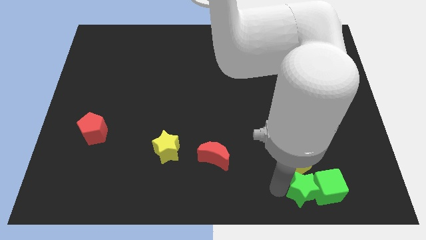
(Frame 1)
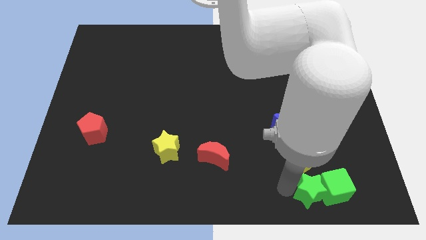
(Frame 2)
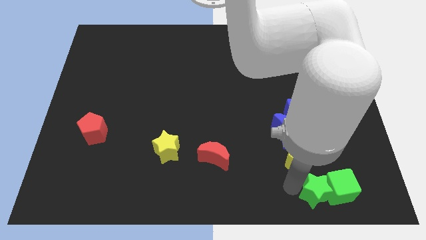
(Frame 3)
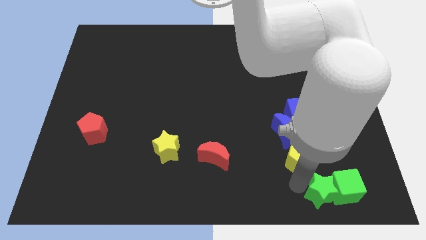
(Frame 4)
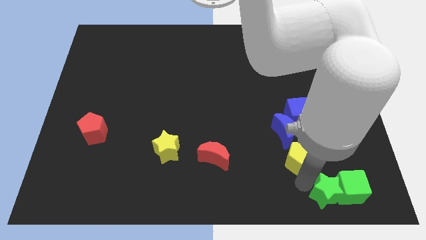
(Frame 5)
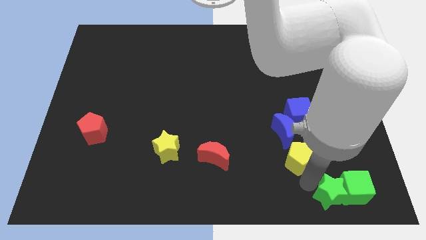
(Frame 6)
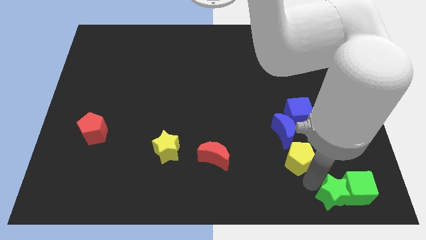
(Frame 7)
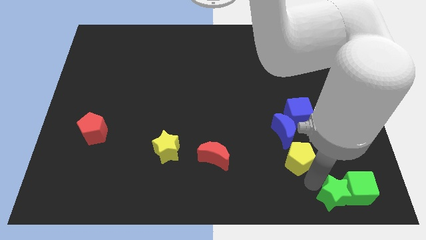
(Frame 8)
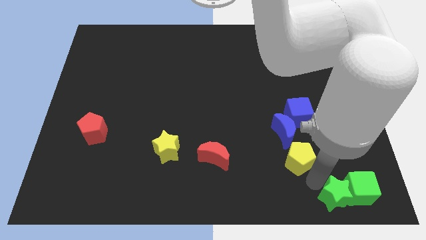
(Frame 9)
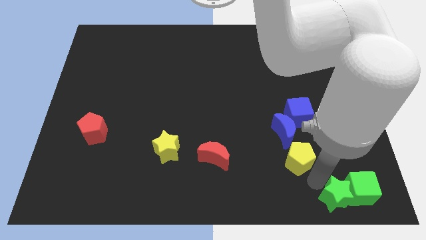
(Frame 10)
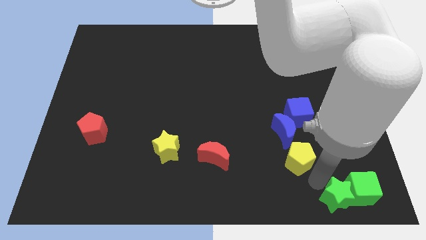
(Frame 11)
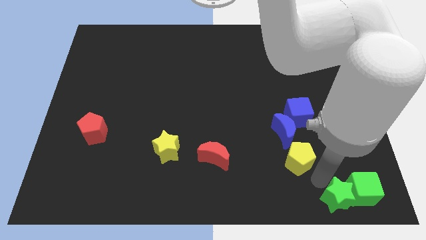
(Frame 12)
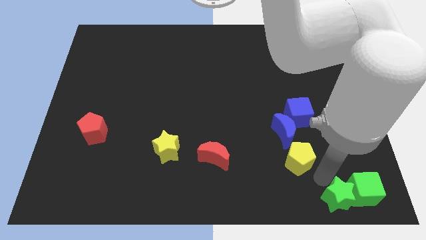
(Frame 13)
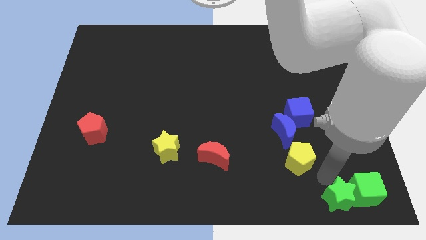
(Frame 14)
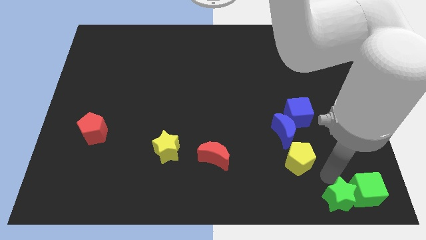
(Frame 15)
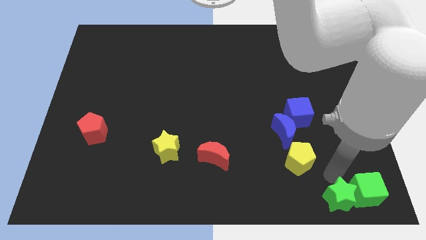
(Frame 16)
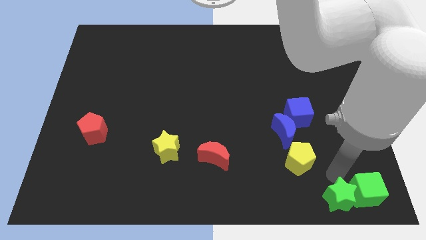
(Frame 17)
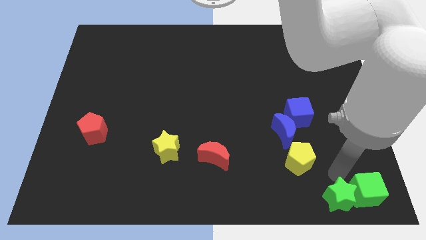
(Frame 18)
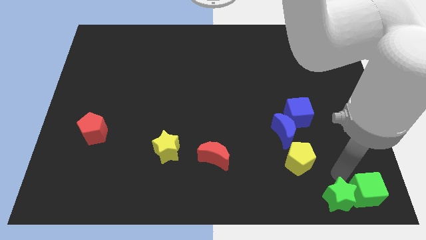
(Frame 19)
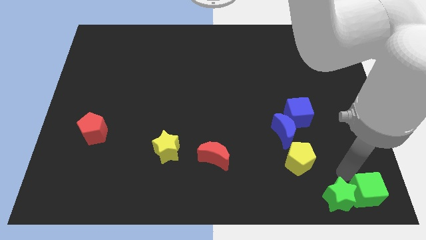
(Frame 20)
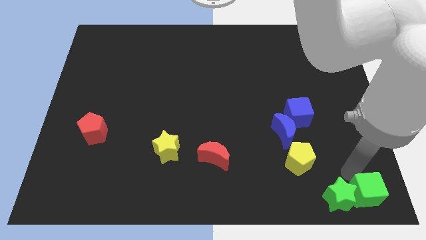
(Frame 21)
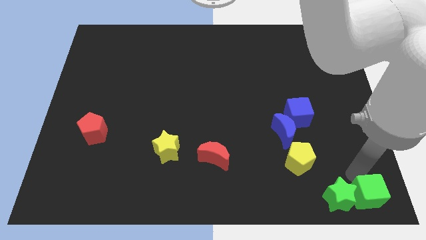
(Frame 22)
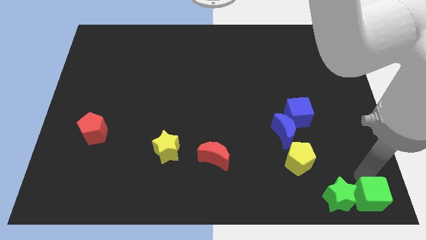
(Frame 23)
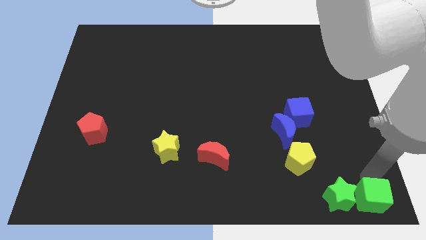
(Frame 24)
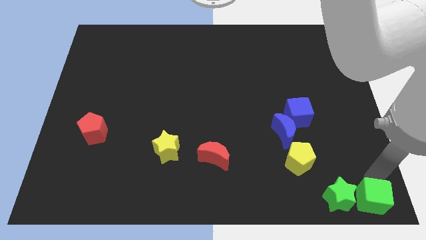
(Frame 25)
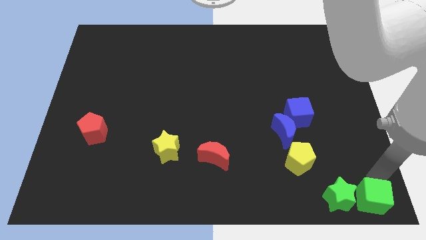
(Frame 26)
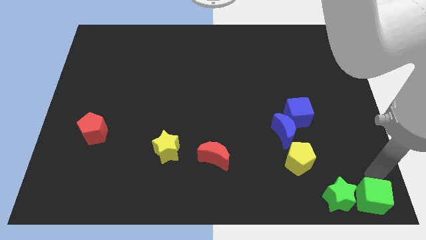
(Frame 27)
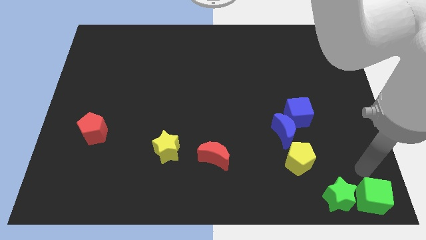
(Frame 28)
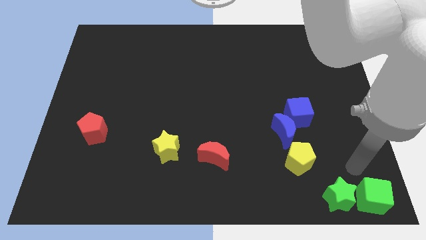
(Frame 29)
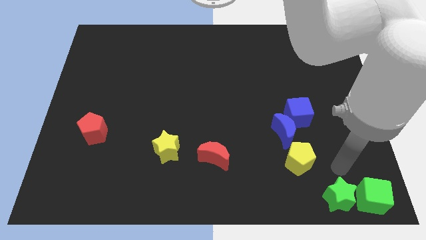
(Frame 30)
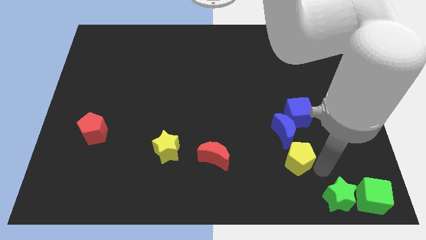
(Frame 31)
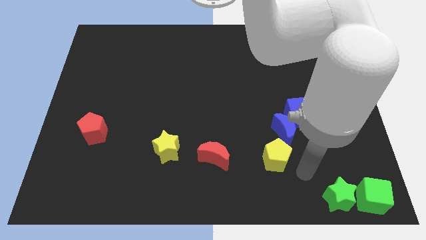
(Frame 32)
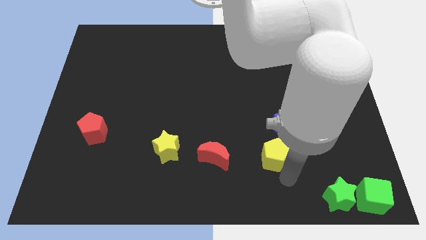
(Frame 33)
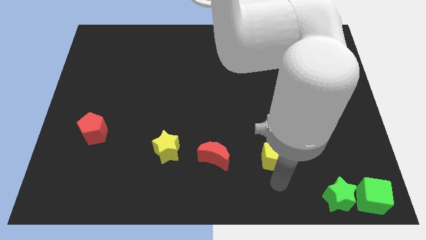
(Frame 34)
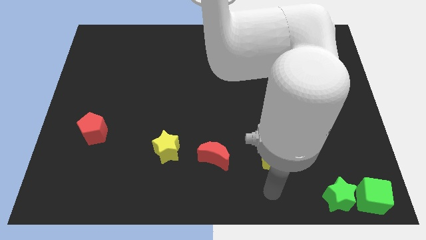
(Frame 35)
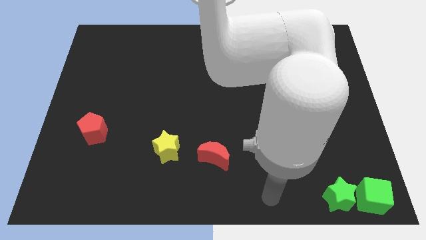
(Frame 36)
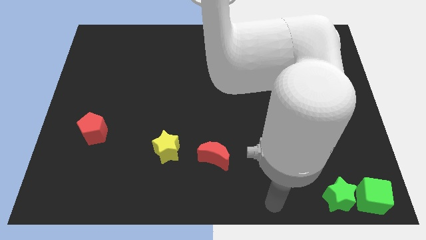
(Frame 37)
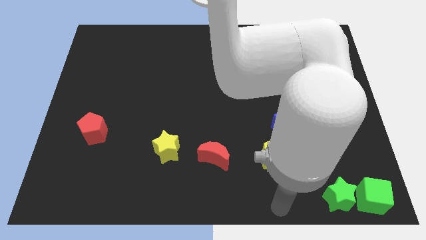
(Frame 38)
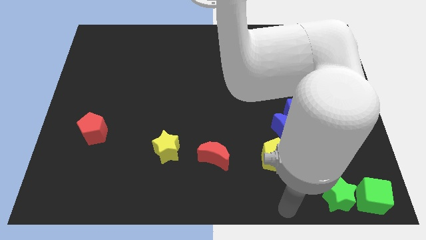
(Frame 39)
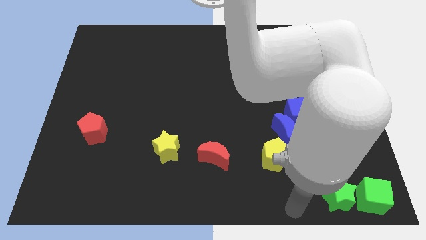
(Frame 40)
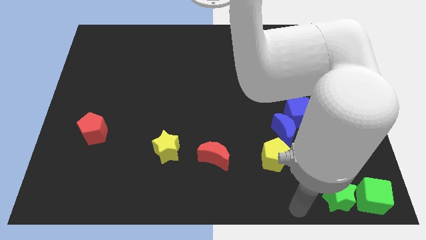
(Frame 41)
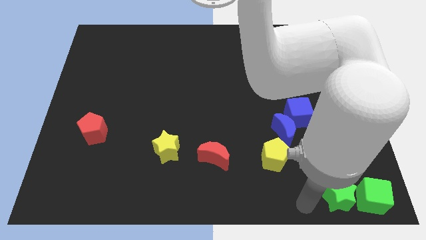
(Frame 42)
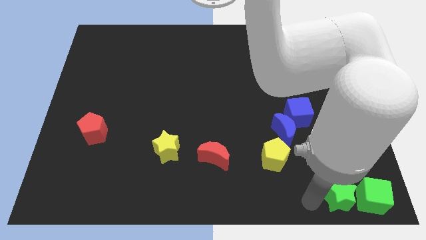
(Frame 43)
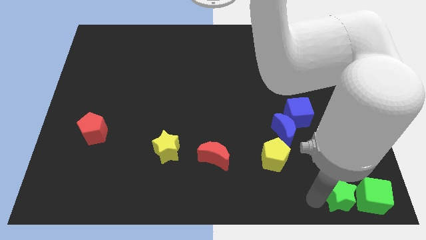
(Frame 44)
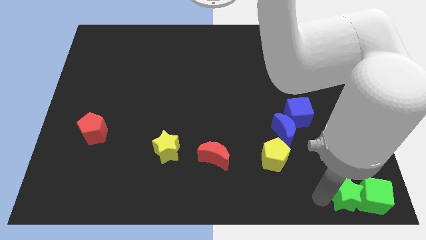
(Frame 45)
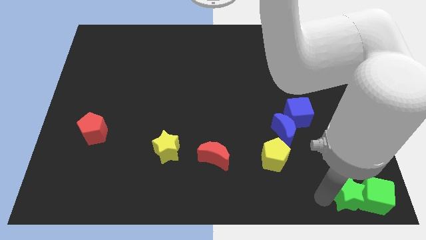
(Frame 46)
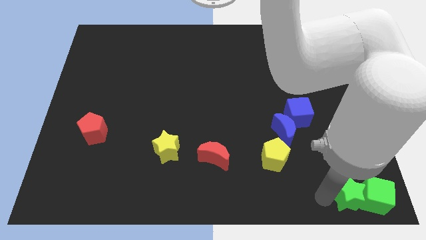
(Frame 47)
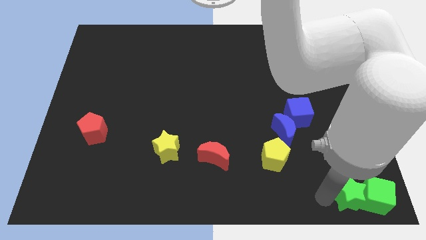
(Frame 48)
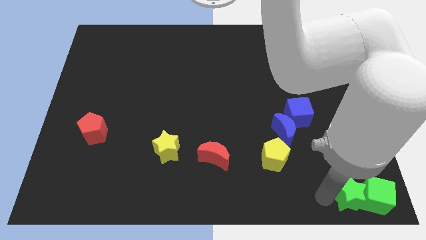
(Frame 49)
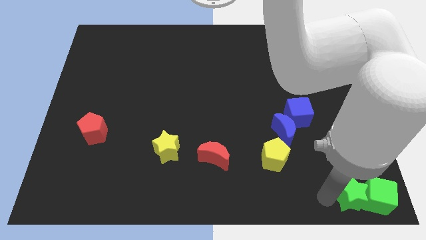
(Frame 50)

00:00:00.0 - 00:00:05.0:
place both the green star and green cube to the bottom right of the board

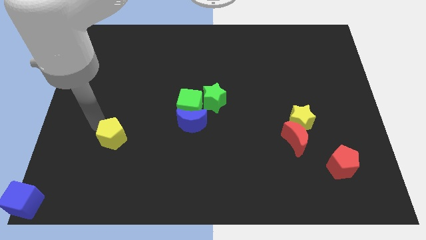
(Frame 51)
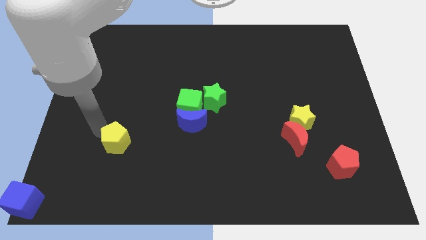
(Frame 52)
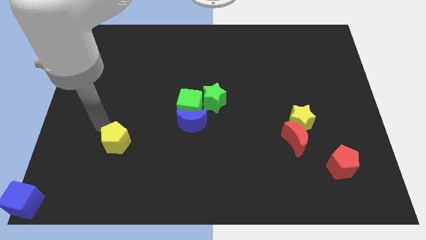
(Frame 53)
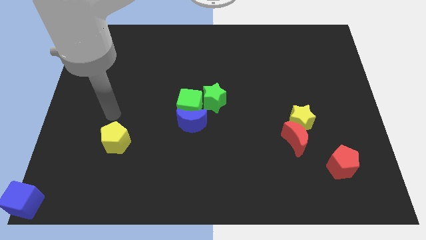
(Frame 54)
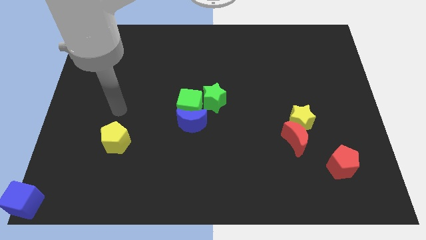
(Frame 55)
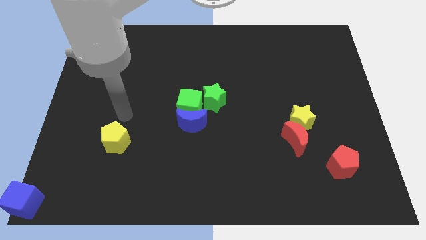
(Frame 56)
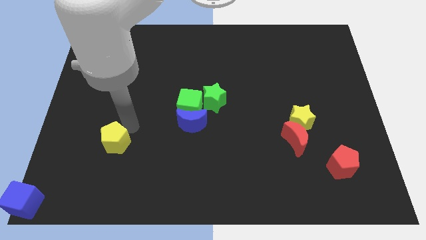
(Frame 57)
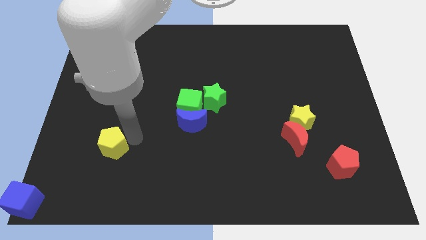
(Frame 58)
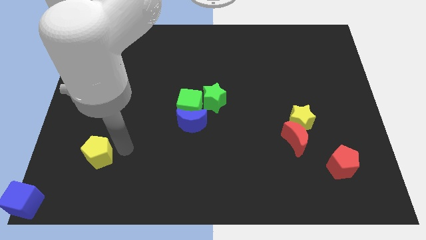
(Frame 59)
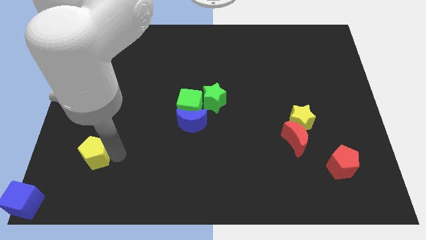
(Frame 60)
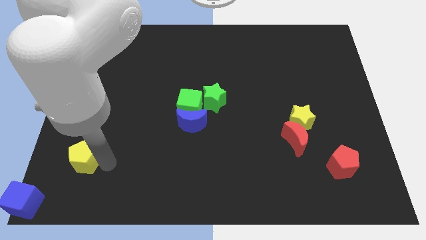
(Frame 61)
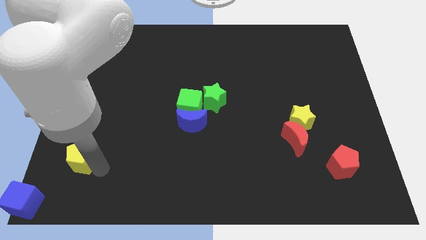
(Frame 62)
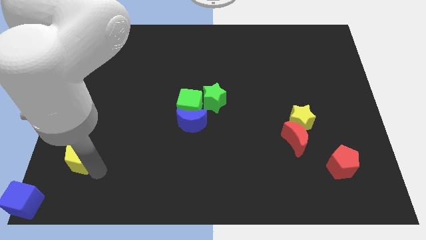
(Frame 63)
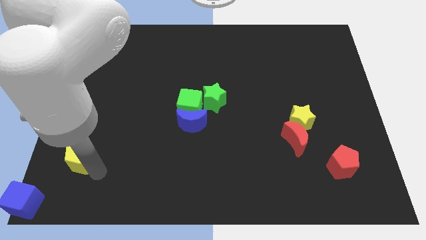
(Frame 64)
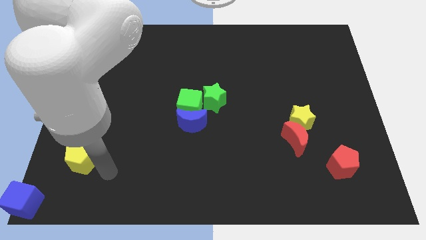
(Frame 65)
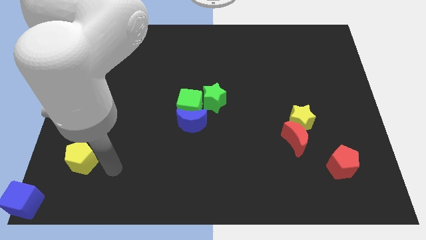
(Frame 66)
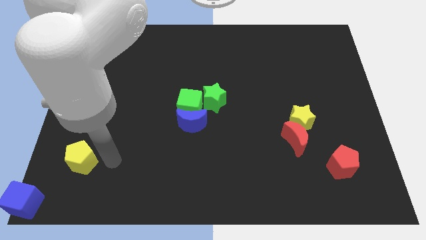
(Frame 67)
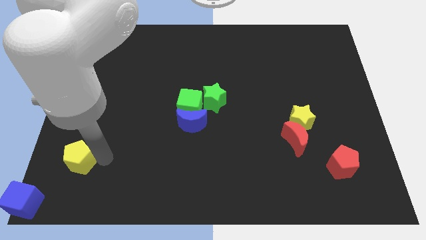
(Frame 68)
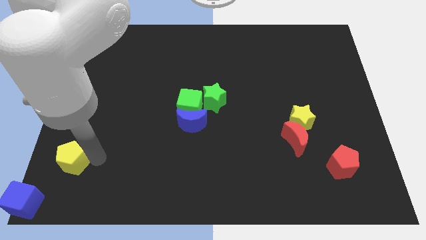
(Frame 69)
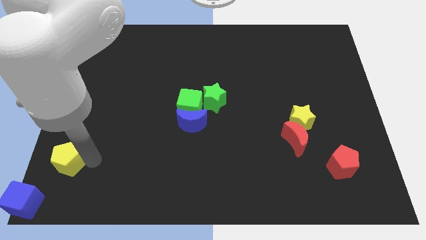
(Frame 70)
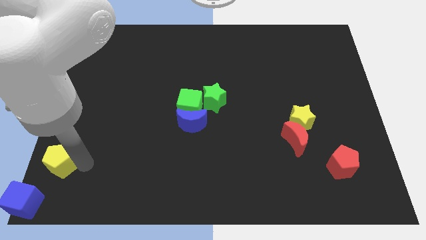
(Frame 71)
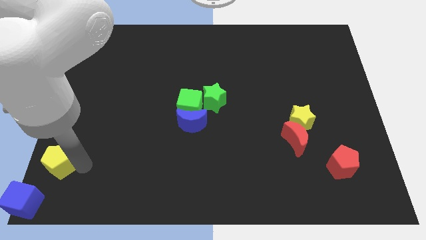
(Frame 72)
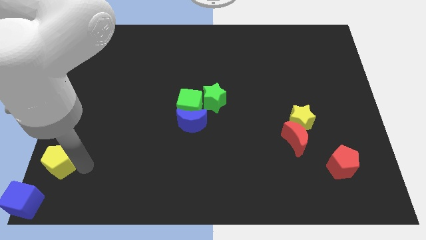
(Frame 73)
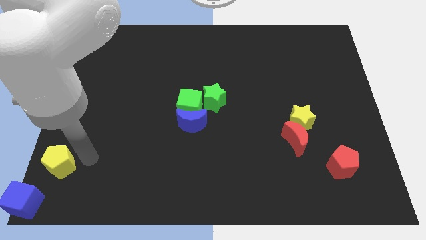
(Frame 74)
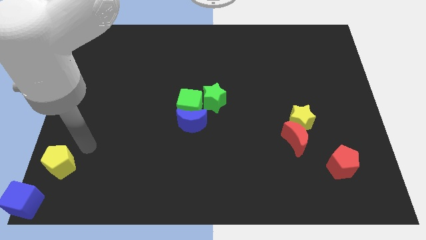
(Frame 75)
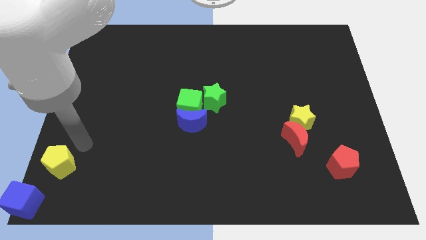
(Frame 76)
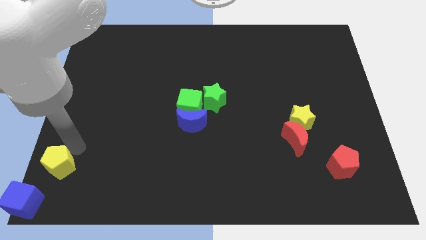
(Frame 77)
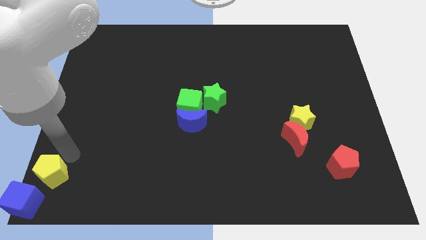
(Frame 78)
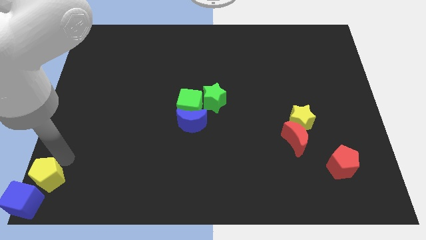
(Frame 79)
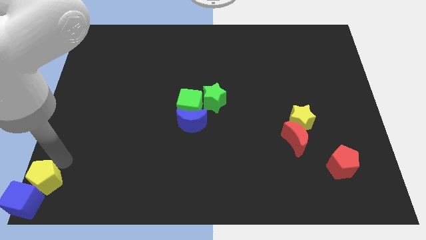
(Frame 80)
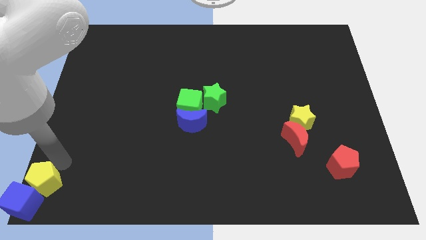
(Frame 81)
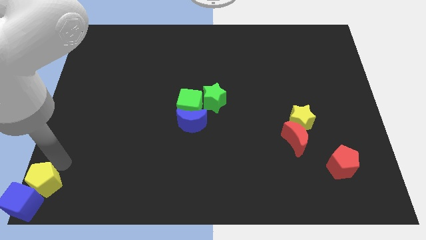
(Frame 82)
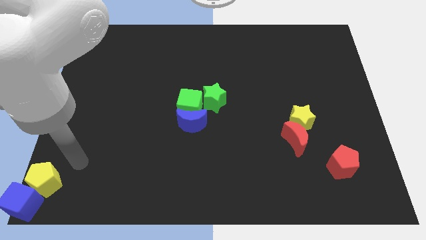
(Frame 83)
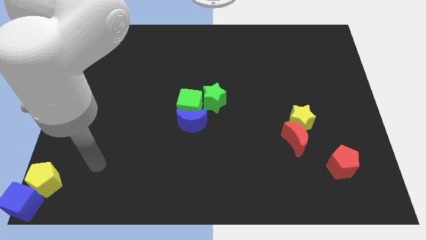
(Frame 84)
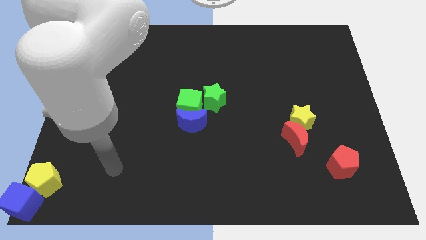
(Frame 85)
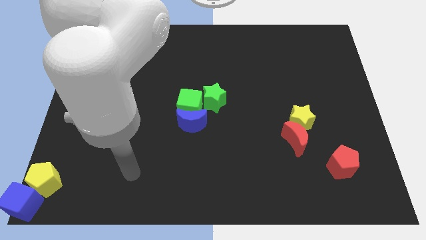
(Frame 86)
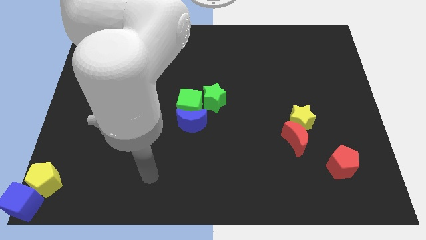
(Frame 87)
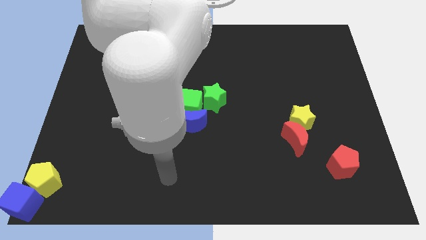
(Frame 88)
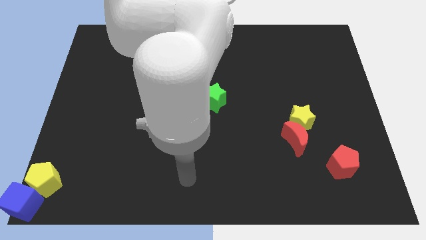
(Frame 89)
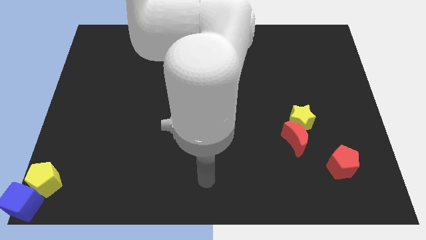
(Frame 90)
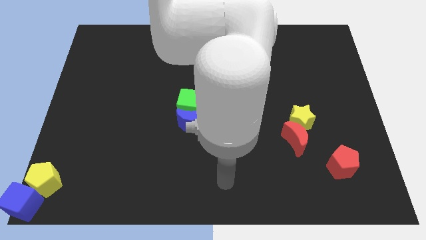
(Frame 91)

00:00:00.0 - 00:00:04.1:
add yellow pentagon on top of blue cube

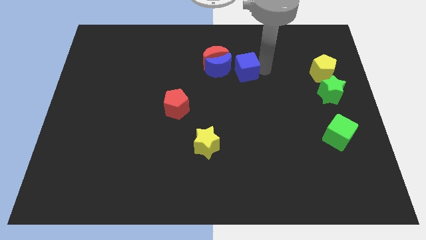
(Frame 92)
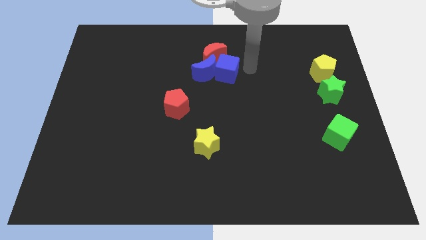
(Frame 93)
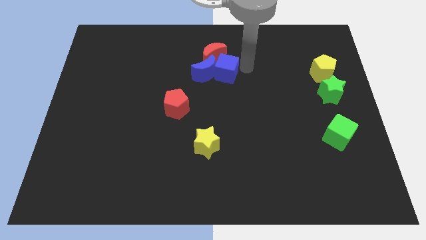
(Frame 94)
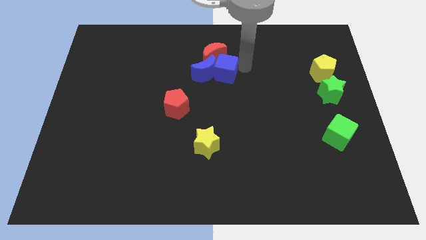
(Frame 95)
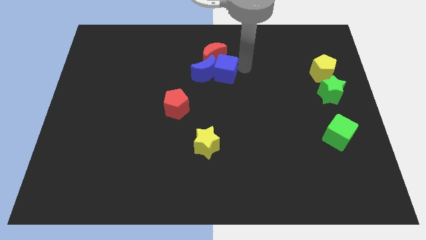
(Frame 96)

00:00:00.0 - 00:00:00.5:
move the blue cube into the blue and red moon
